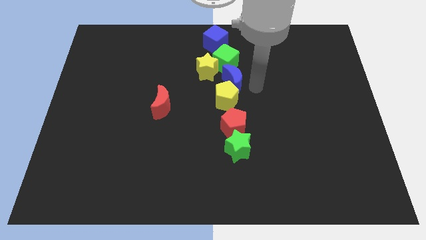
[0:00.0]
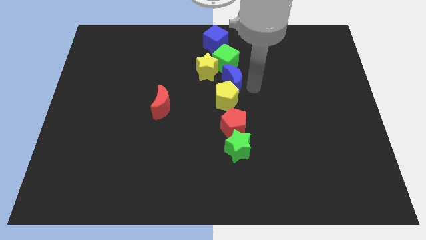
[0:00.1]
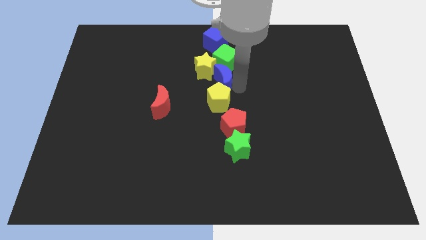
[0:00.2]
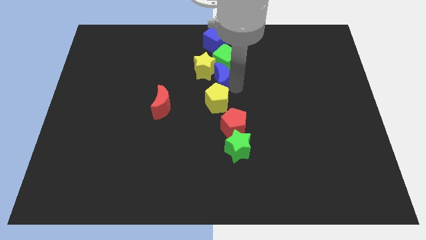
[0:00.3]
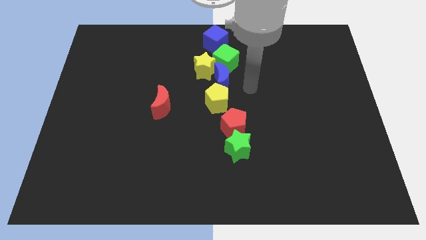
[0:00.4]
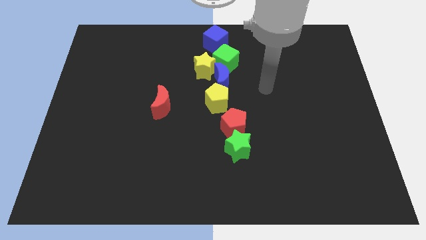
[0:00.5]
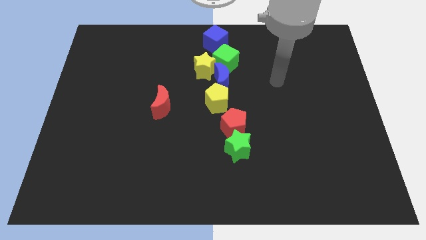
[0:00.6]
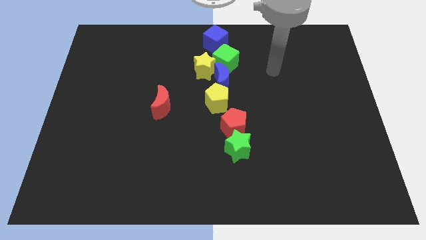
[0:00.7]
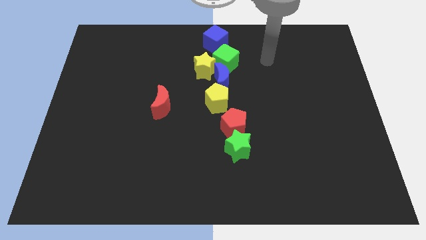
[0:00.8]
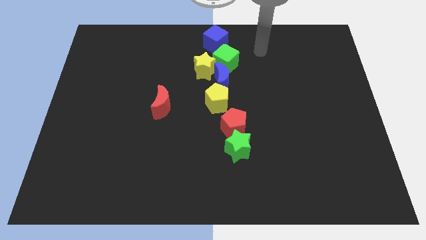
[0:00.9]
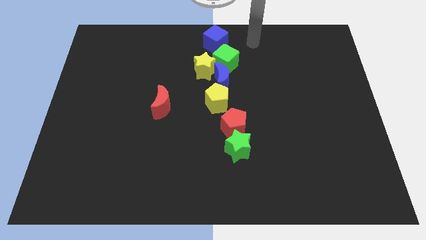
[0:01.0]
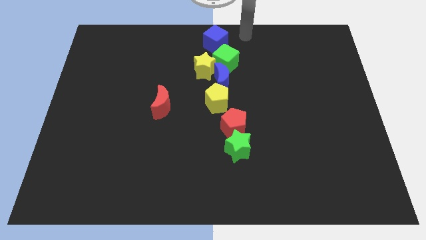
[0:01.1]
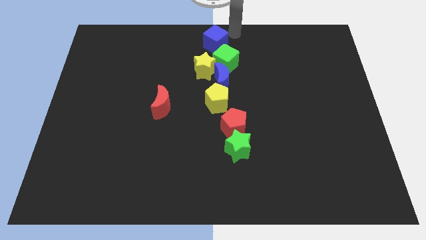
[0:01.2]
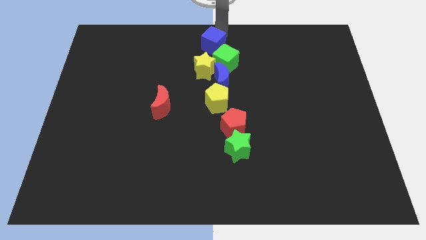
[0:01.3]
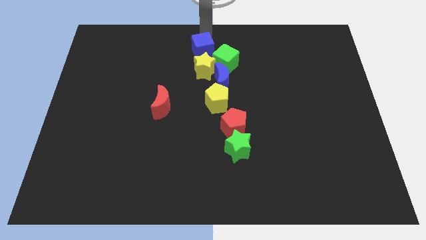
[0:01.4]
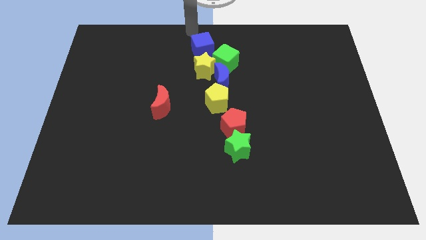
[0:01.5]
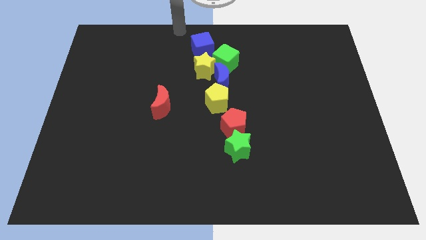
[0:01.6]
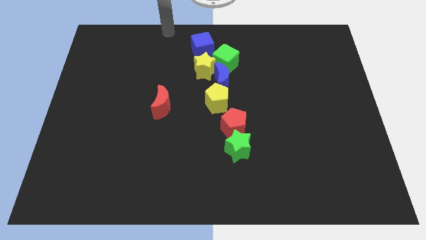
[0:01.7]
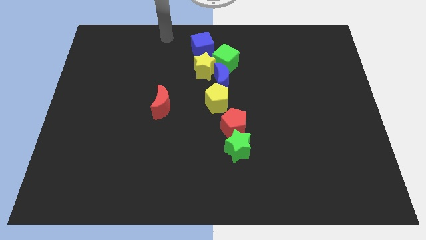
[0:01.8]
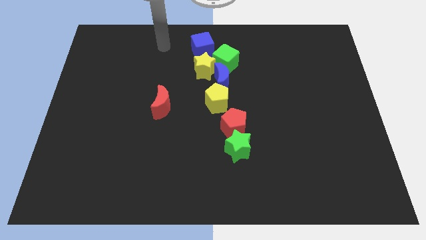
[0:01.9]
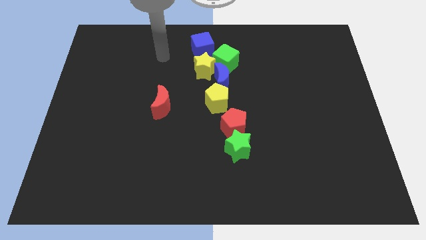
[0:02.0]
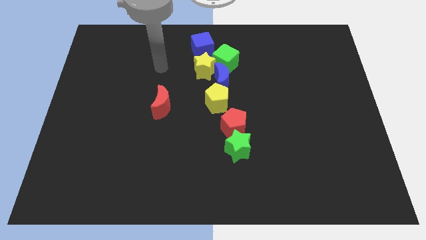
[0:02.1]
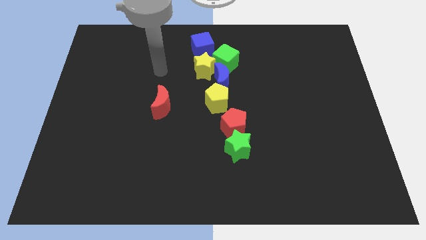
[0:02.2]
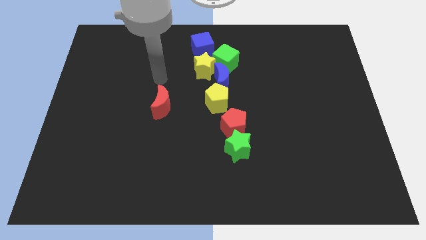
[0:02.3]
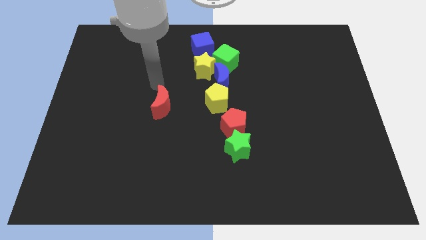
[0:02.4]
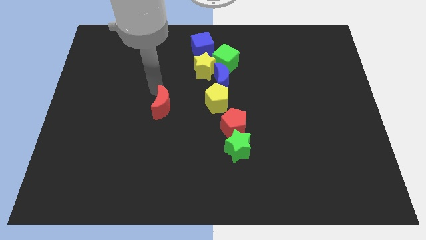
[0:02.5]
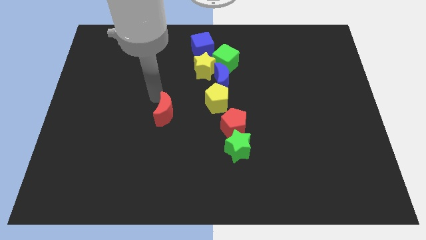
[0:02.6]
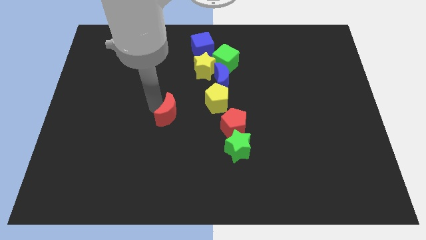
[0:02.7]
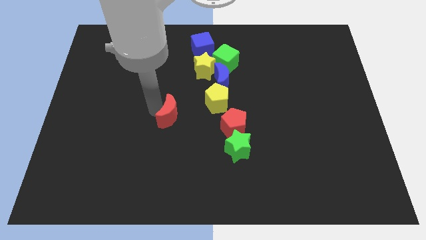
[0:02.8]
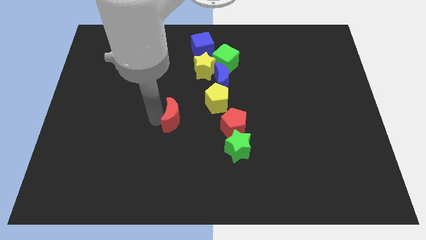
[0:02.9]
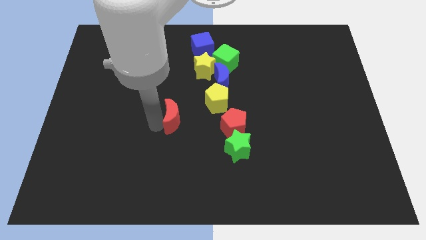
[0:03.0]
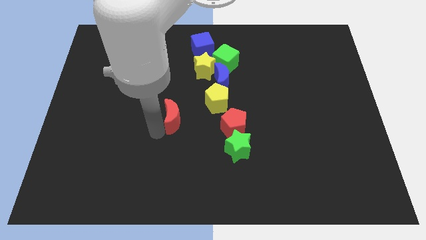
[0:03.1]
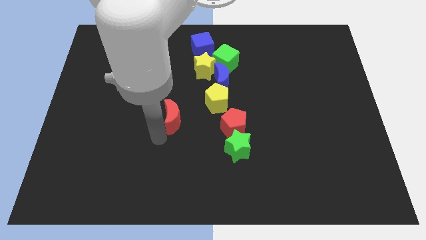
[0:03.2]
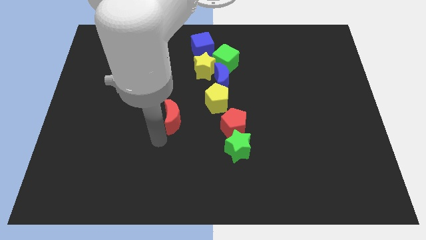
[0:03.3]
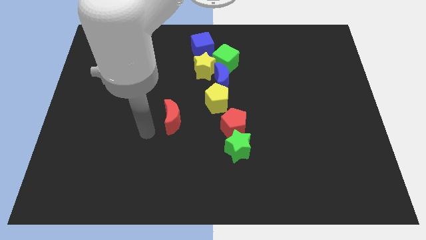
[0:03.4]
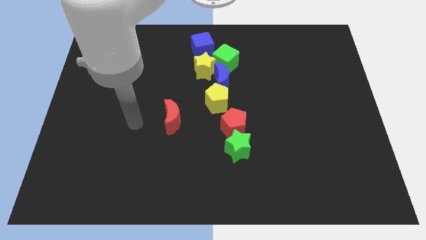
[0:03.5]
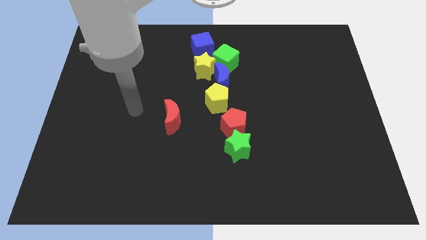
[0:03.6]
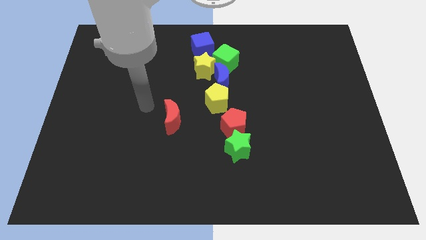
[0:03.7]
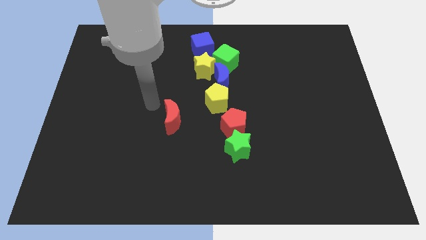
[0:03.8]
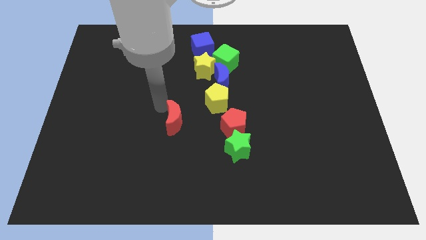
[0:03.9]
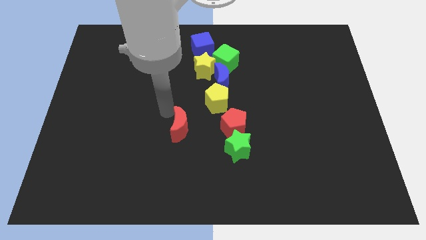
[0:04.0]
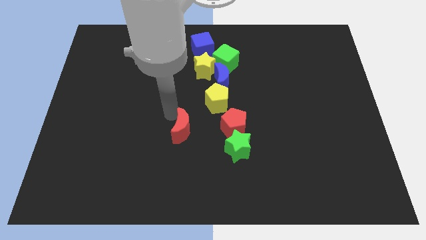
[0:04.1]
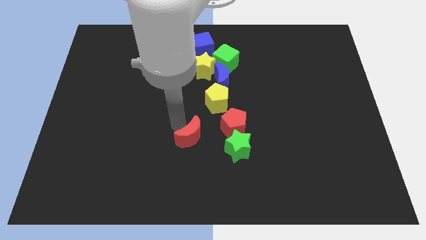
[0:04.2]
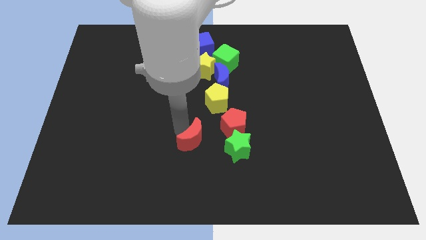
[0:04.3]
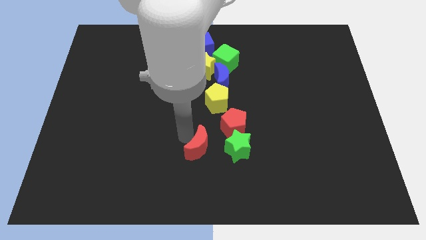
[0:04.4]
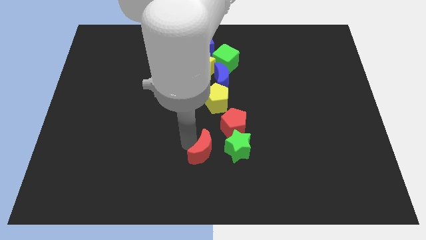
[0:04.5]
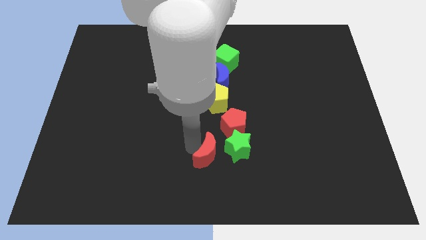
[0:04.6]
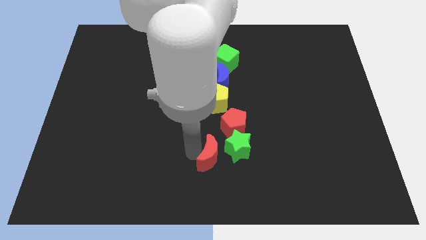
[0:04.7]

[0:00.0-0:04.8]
push the red crescent towards bottom

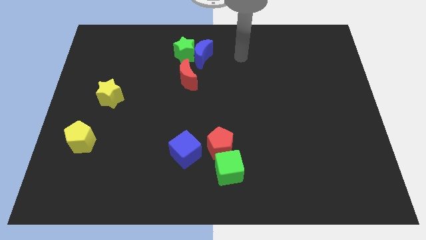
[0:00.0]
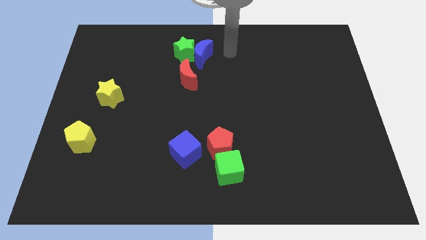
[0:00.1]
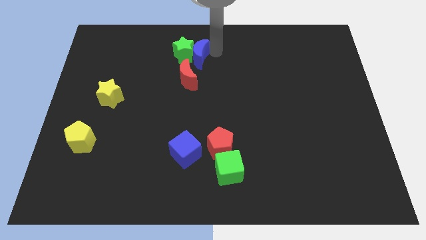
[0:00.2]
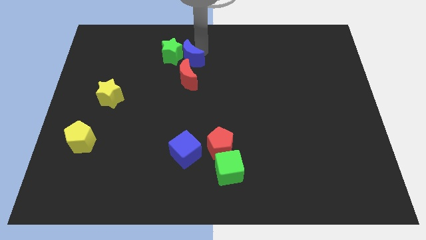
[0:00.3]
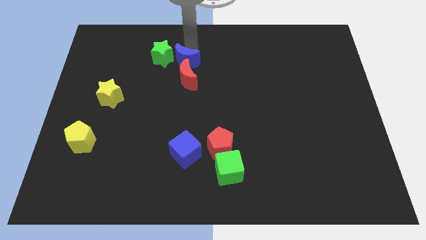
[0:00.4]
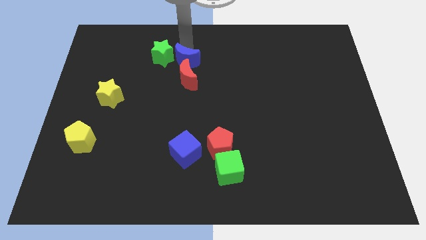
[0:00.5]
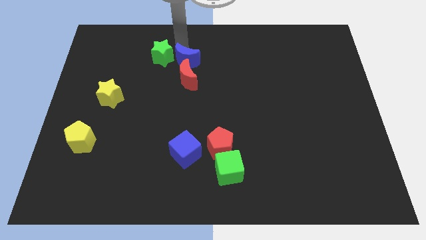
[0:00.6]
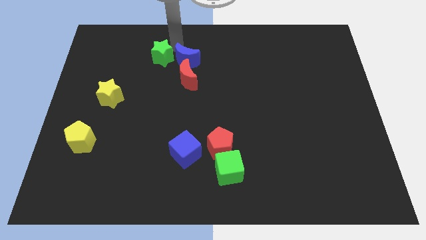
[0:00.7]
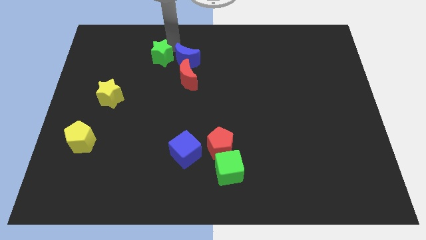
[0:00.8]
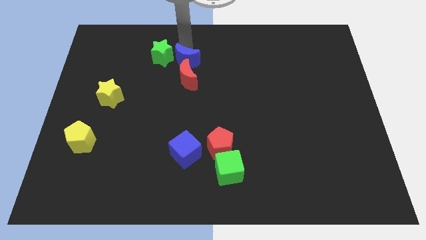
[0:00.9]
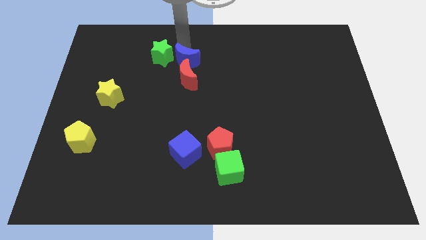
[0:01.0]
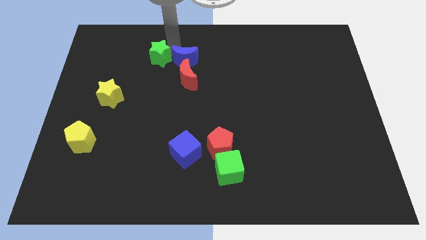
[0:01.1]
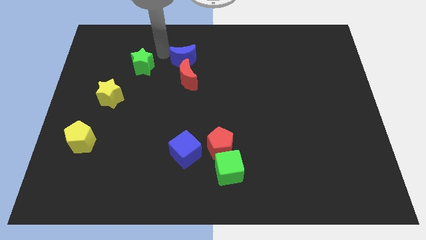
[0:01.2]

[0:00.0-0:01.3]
push the green star away from the blue moon

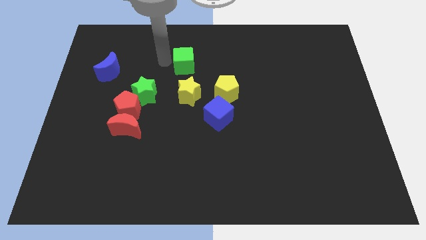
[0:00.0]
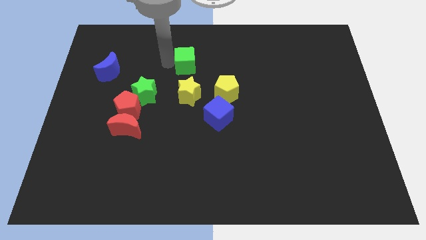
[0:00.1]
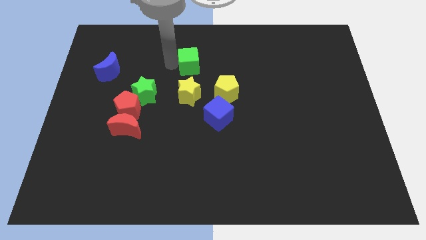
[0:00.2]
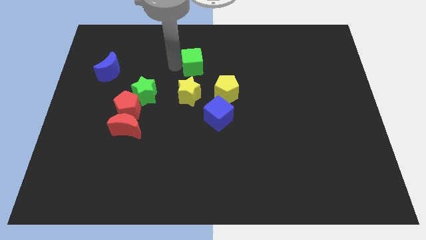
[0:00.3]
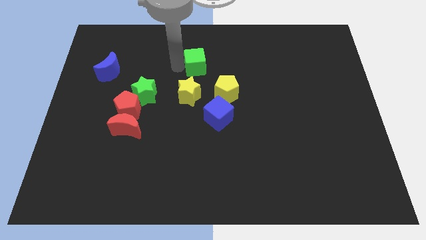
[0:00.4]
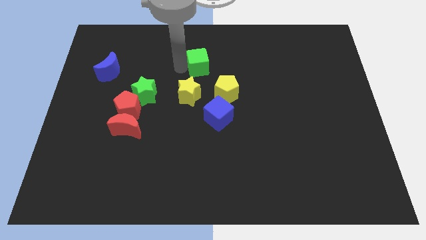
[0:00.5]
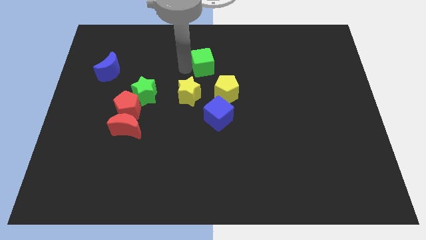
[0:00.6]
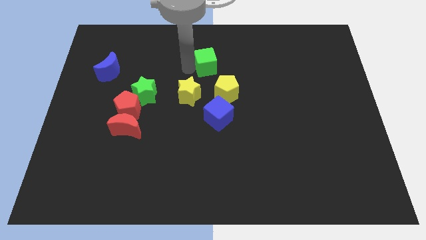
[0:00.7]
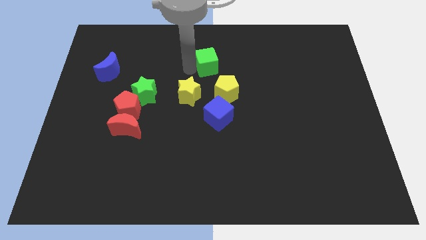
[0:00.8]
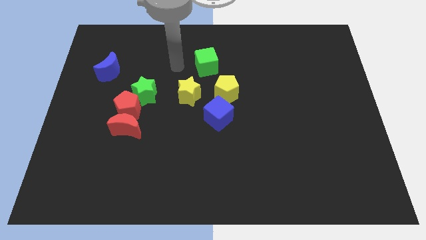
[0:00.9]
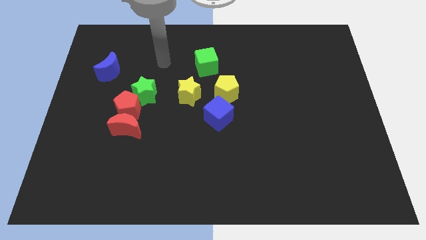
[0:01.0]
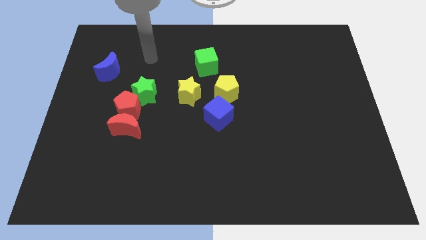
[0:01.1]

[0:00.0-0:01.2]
slide the green cube slightly to the right

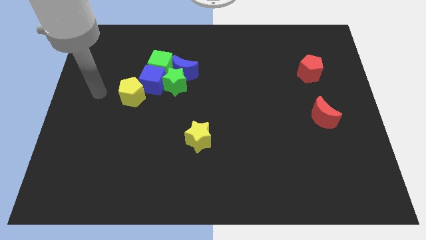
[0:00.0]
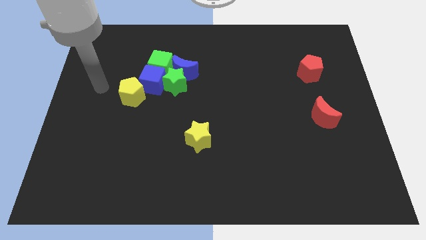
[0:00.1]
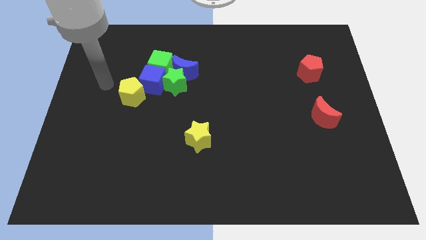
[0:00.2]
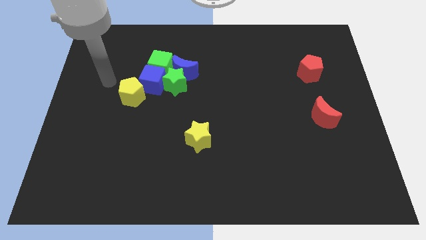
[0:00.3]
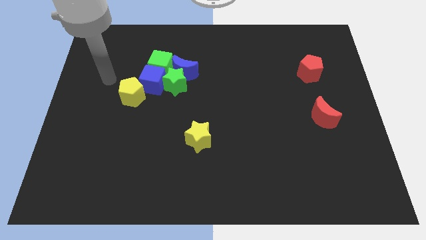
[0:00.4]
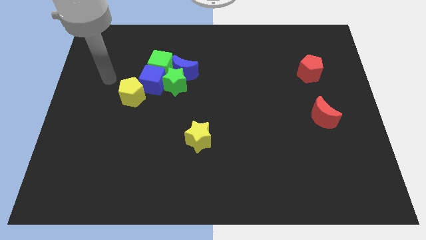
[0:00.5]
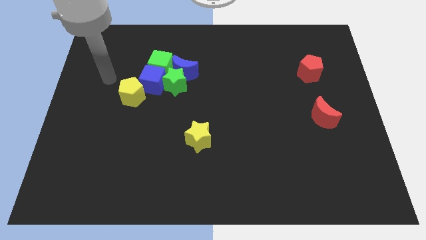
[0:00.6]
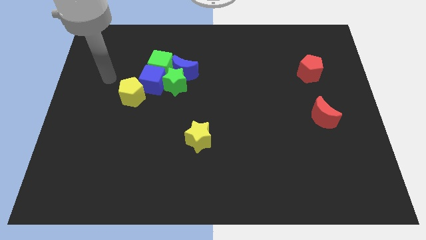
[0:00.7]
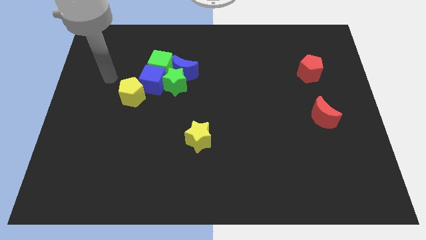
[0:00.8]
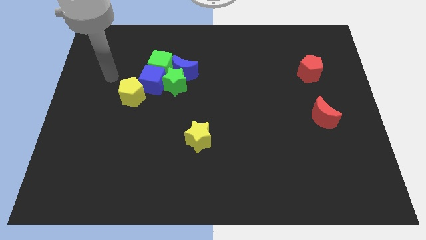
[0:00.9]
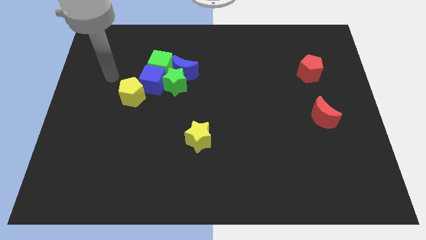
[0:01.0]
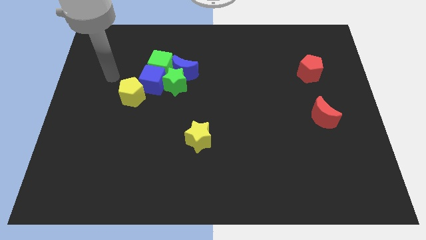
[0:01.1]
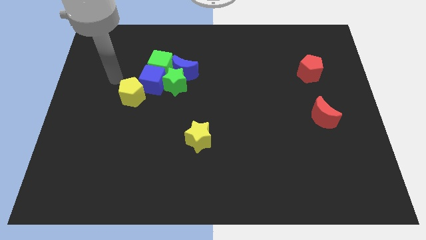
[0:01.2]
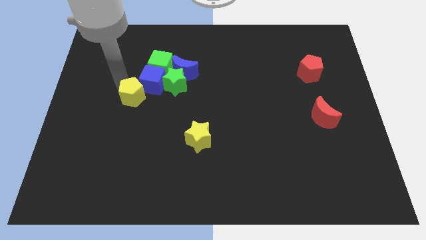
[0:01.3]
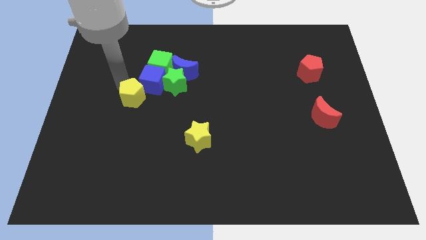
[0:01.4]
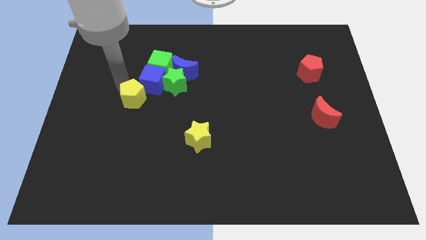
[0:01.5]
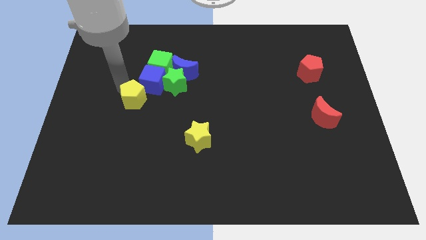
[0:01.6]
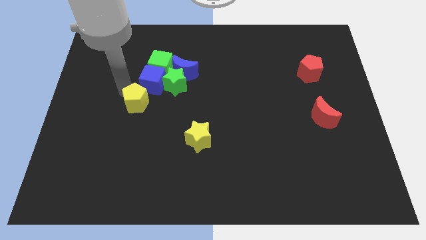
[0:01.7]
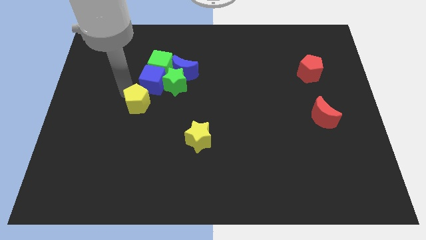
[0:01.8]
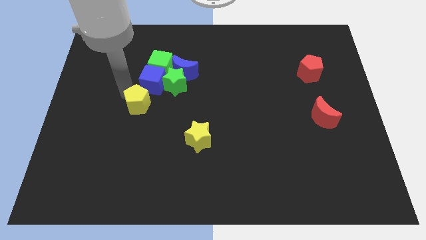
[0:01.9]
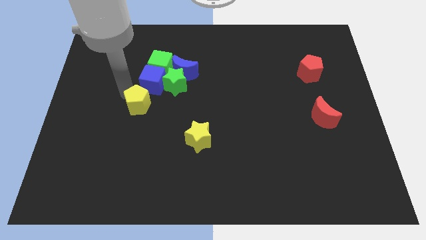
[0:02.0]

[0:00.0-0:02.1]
move yellow pentagon below the blue cube
